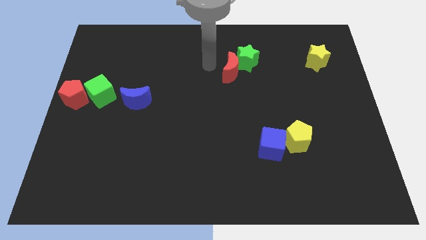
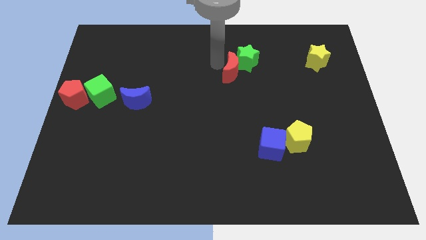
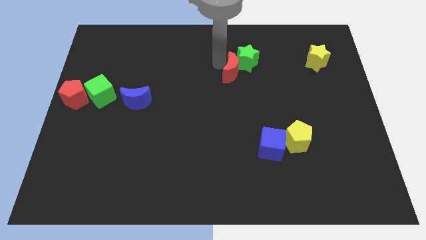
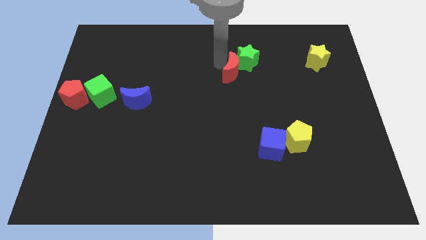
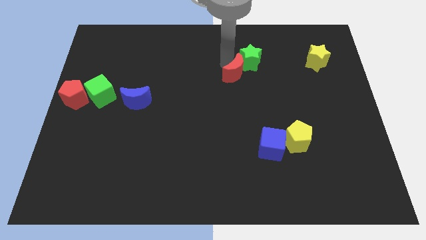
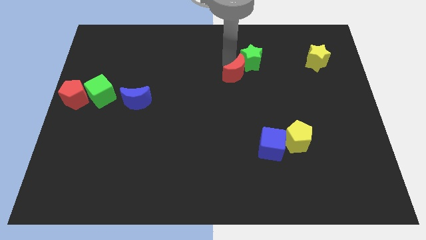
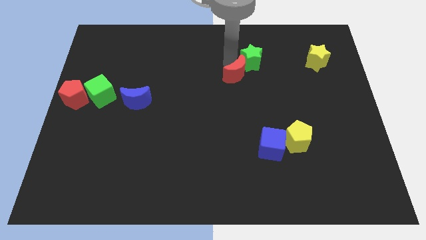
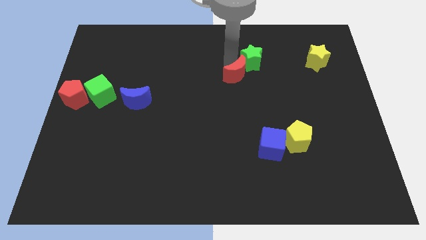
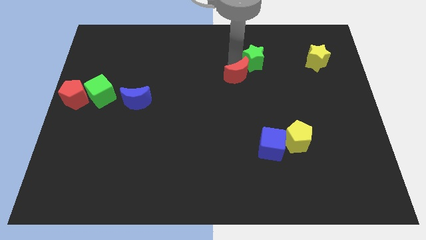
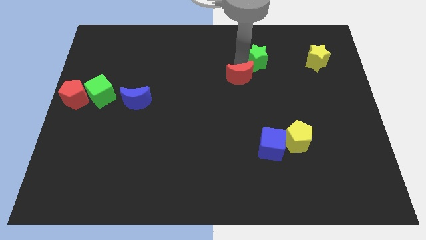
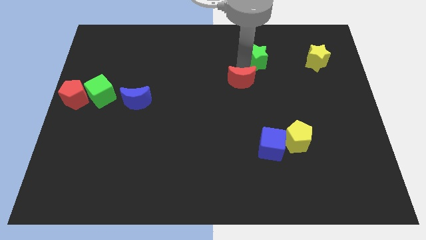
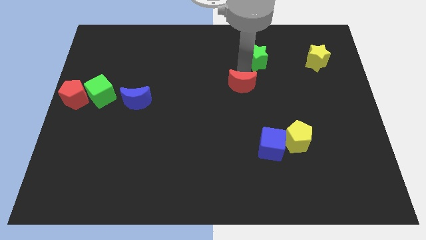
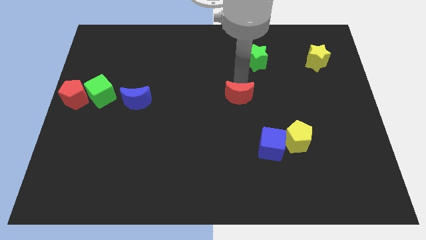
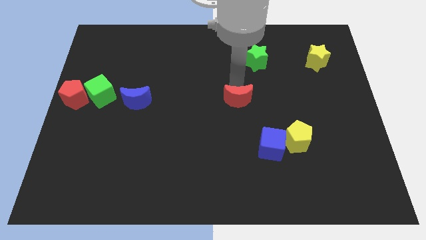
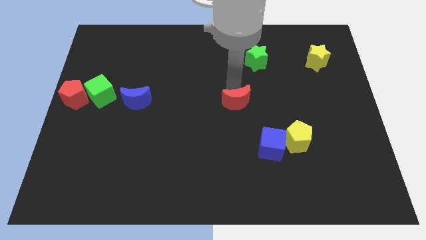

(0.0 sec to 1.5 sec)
push red crescent slightly towards the down

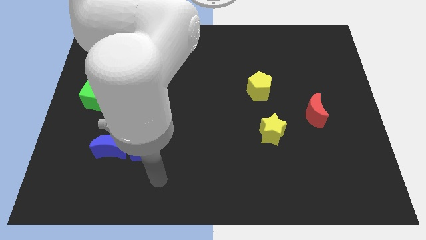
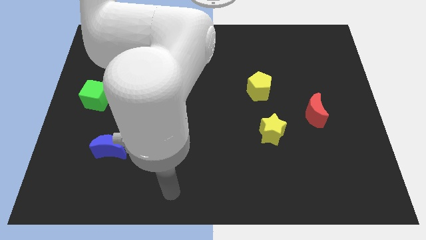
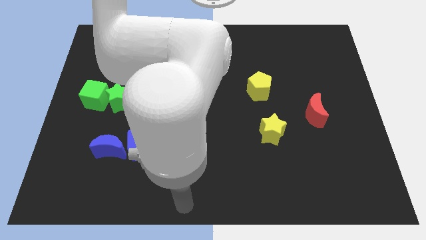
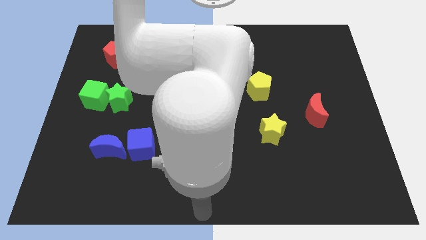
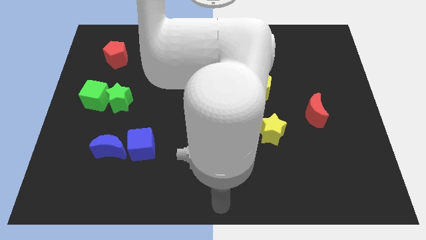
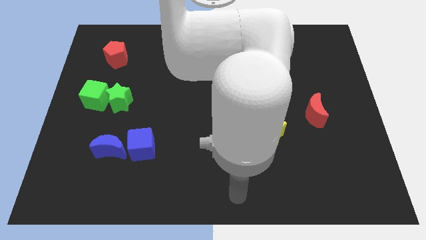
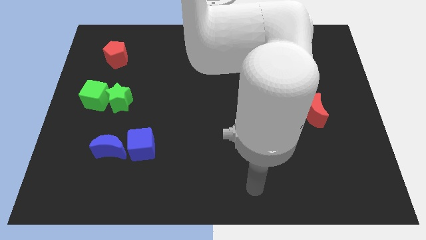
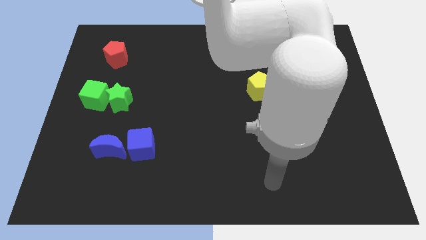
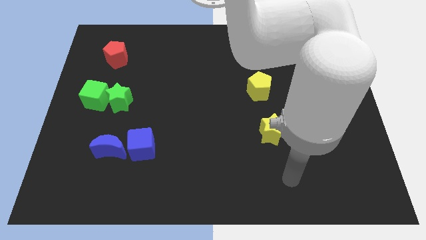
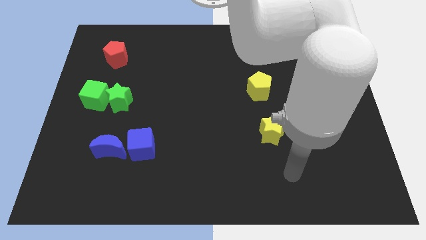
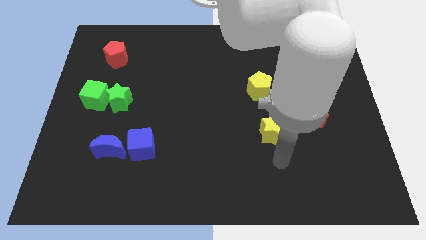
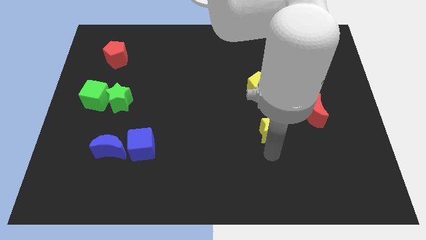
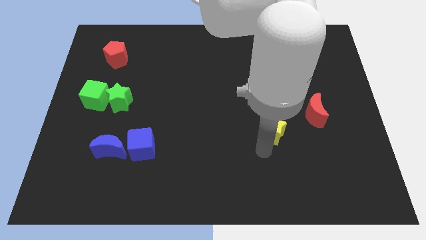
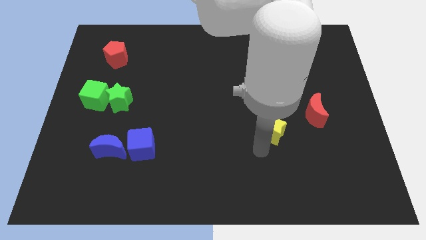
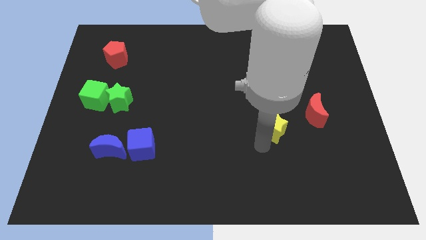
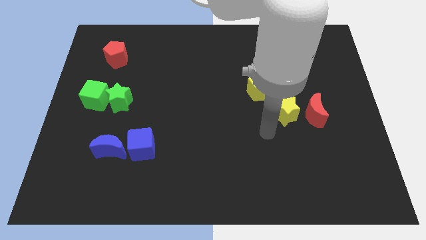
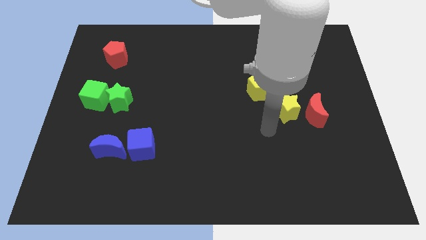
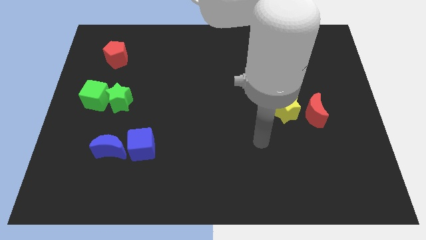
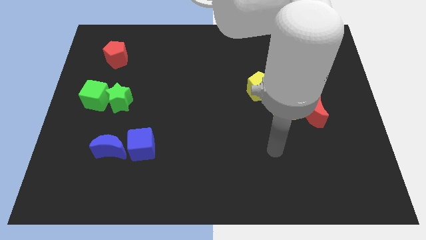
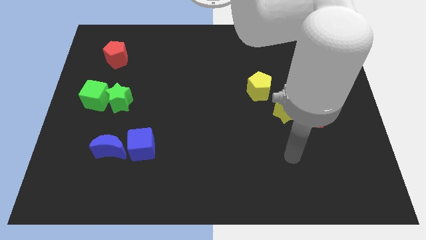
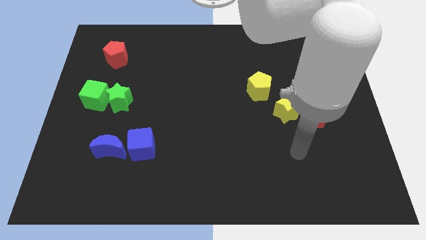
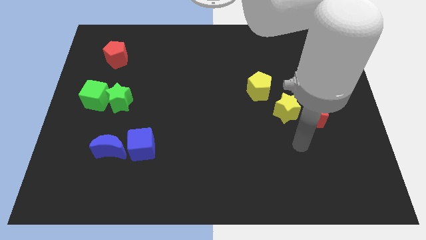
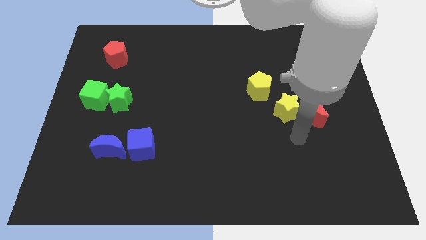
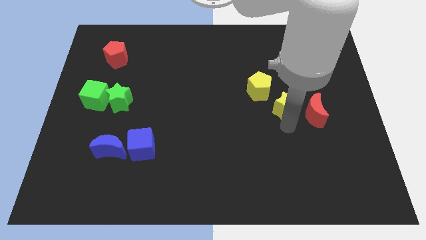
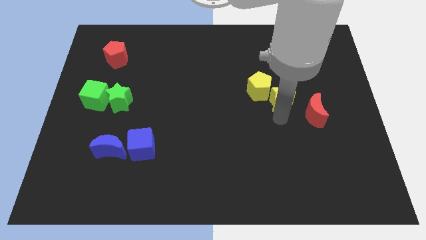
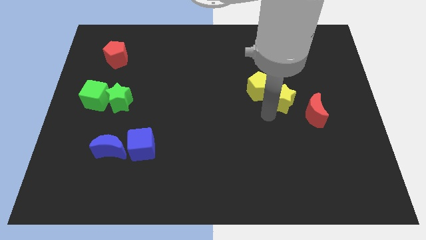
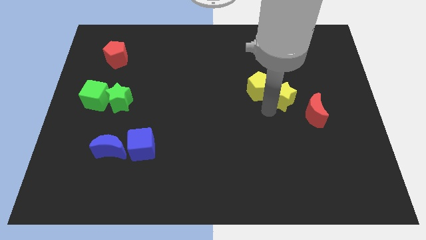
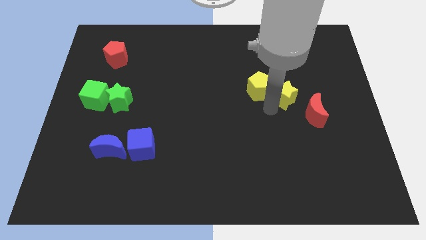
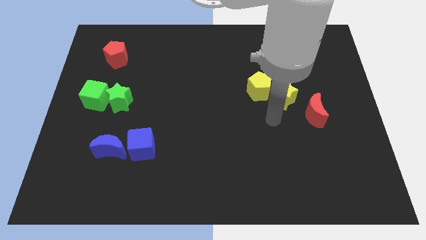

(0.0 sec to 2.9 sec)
place the yellow star in between the red moon and yellow pentagon

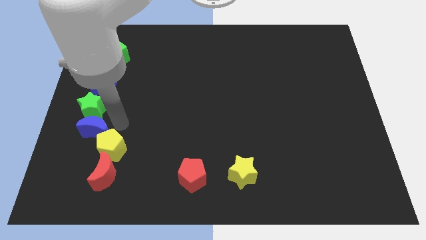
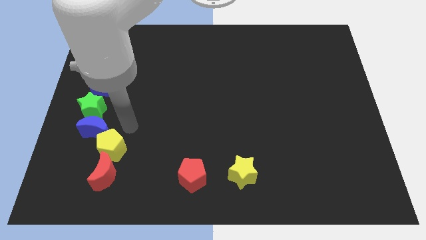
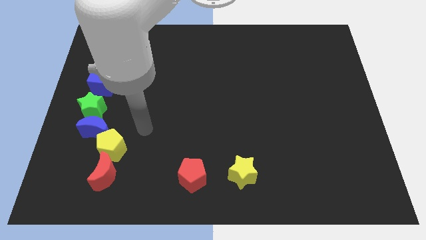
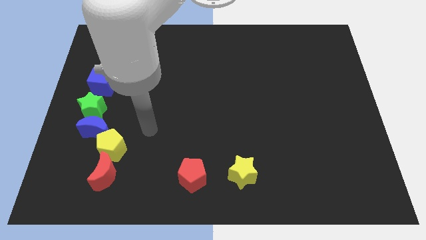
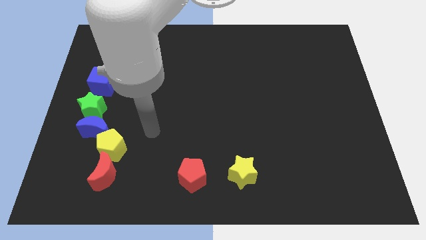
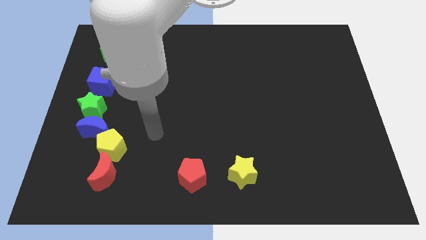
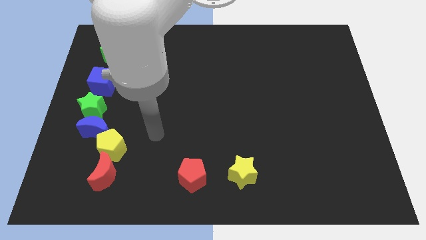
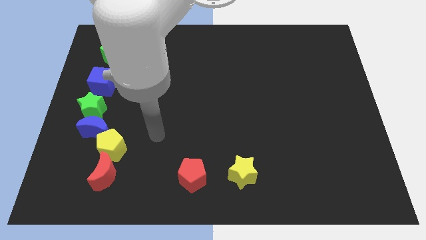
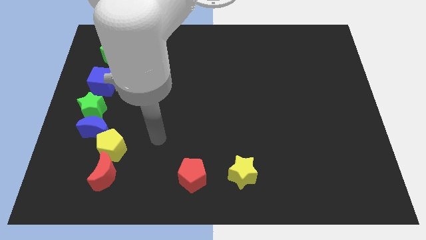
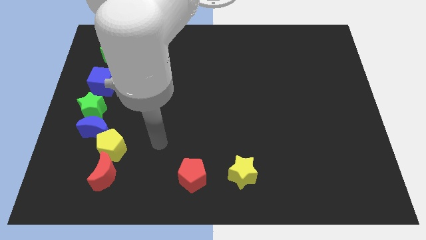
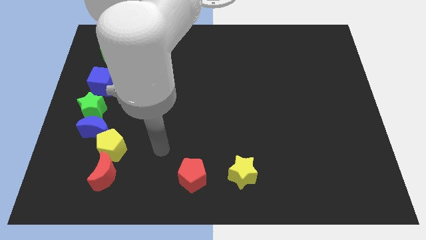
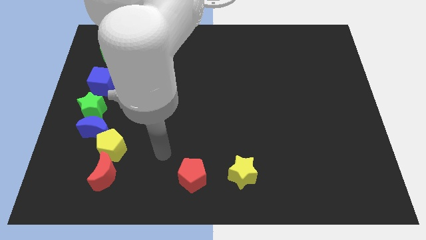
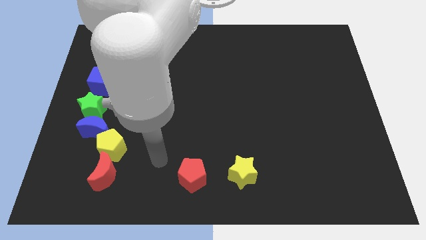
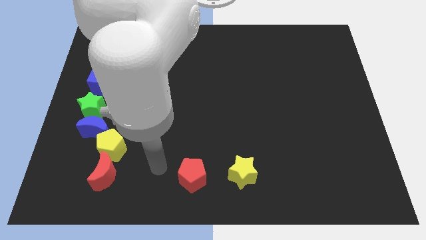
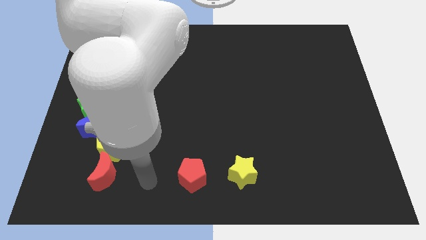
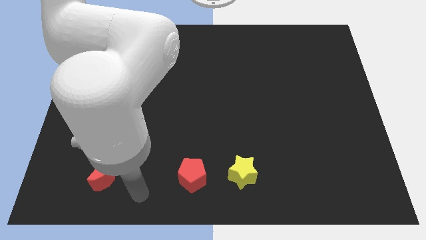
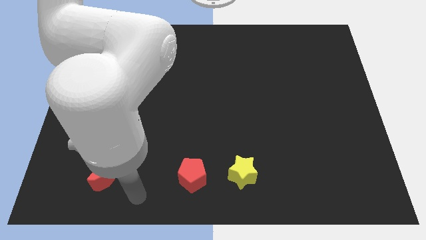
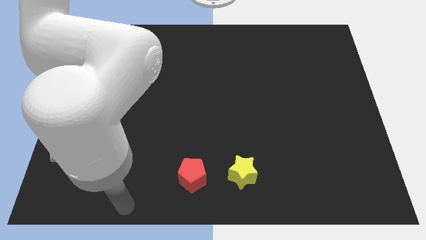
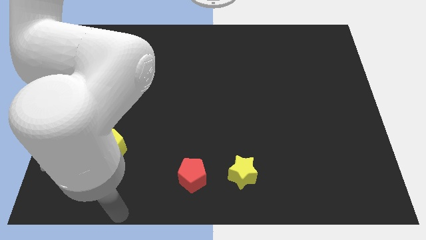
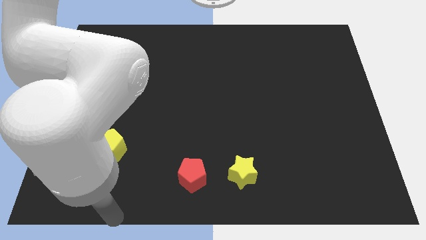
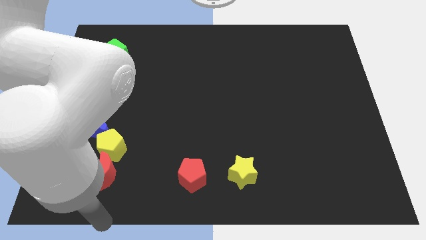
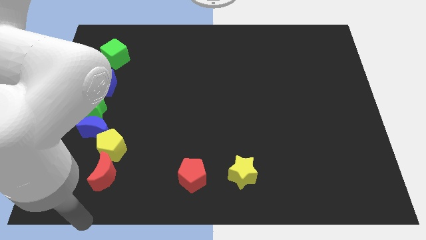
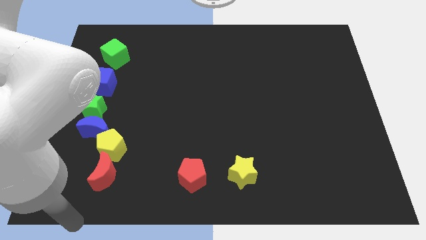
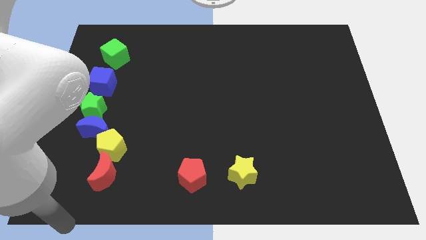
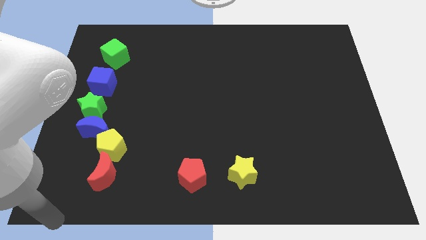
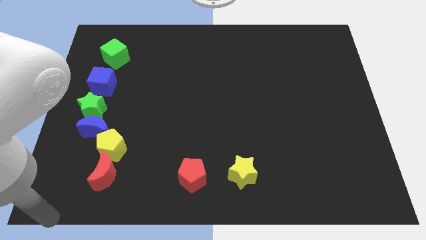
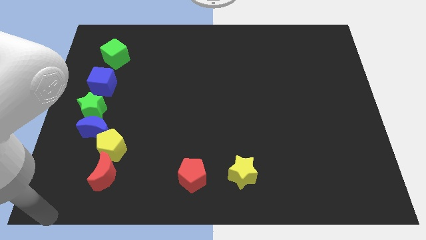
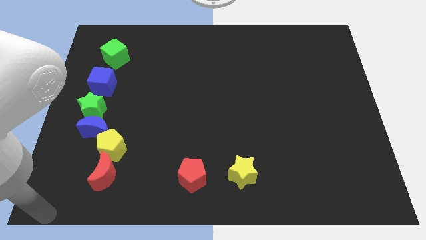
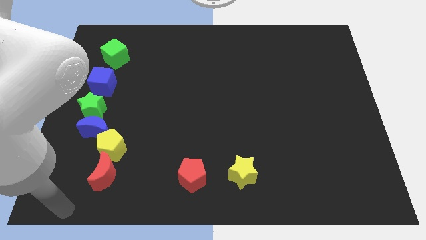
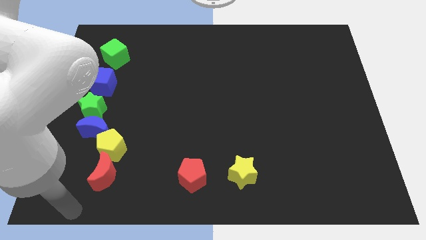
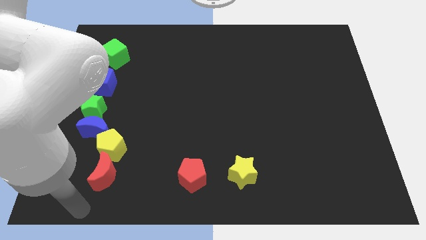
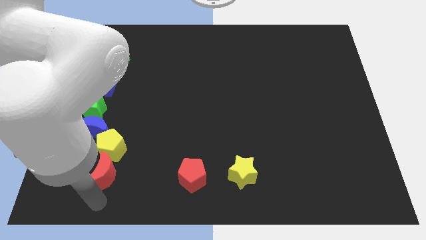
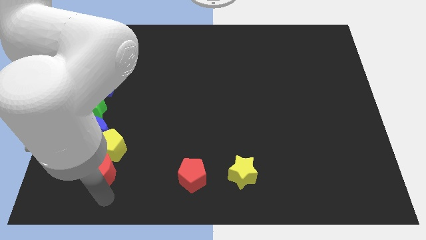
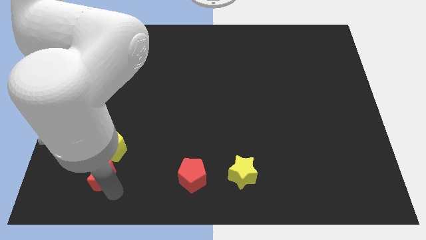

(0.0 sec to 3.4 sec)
place the arm near the red moon

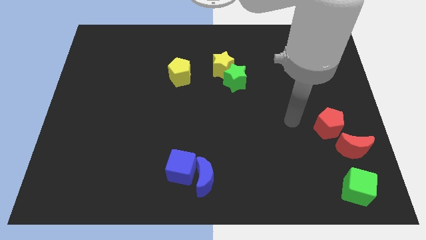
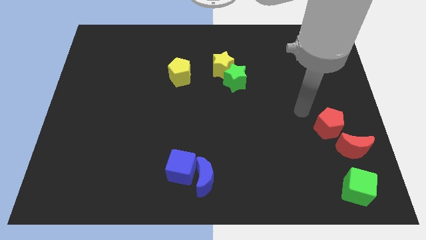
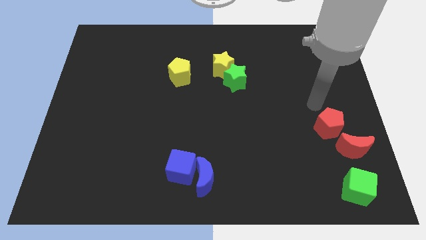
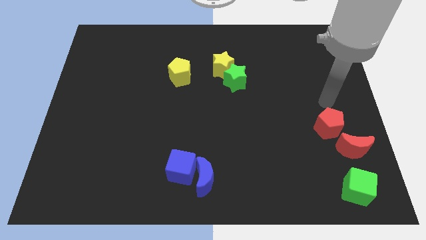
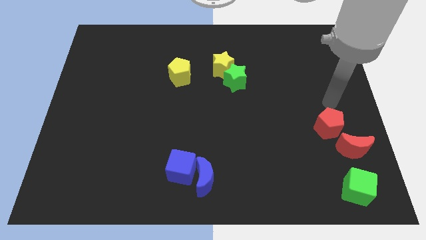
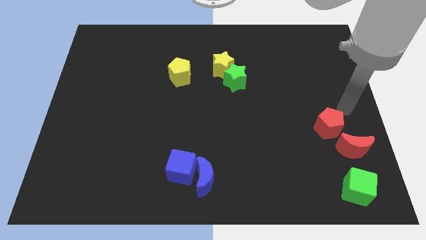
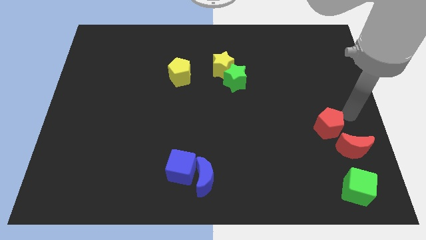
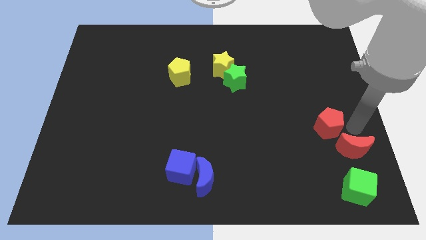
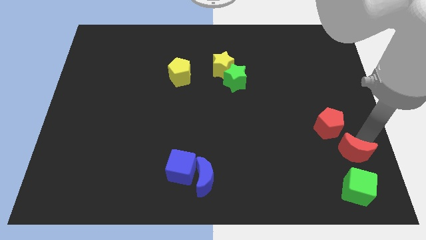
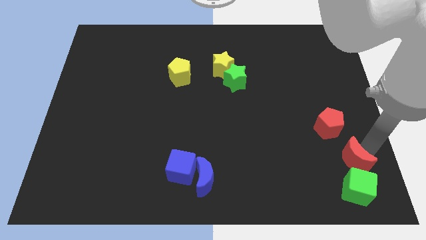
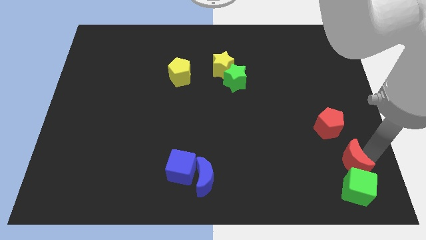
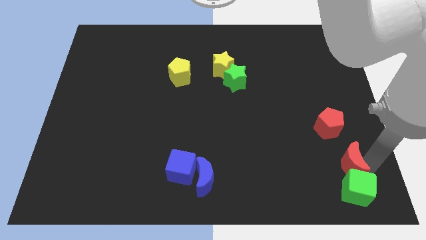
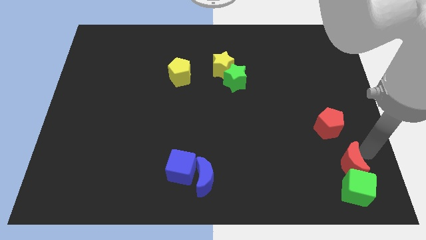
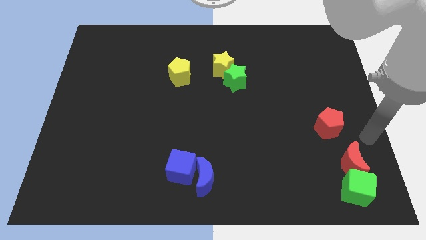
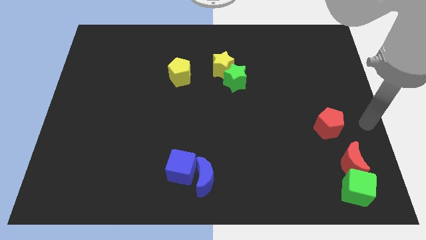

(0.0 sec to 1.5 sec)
slightly push the red crescent into the green cube
